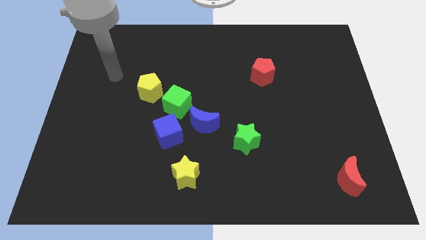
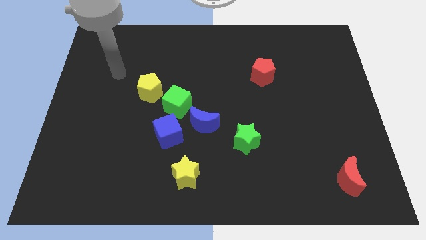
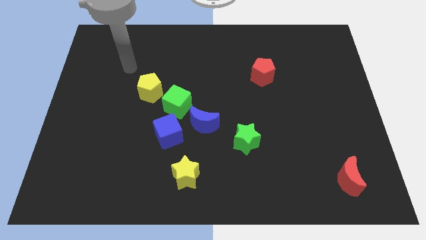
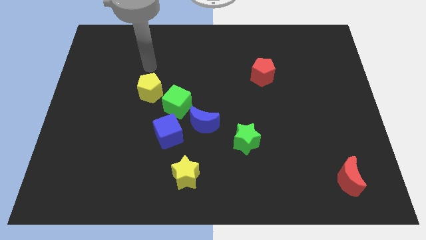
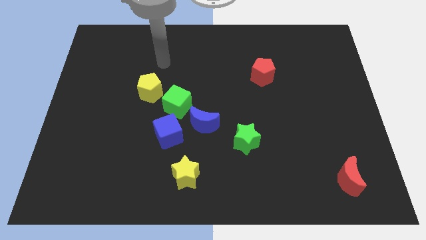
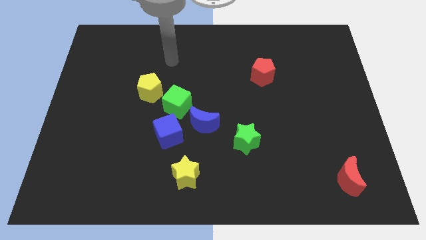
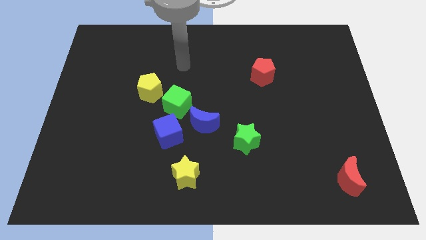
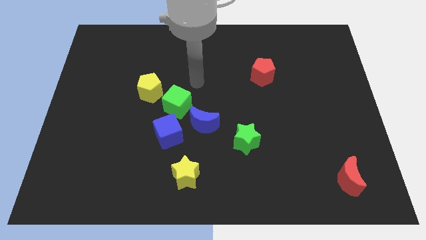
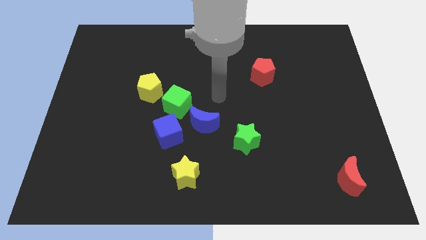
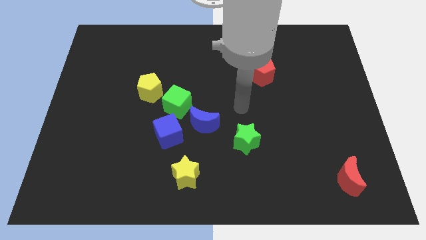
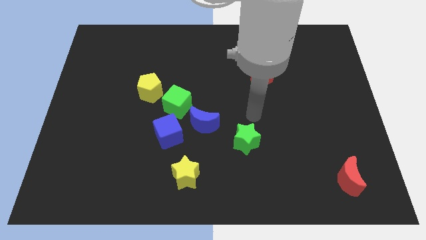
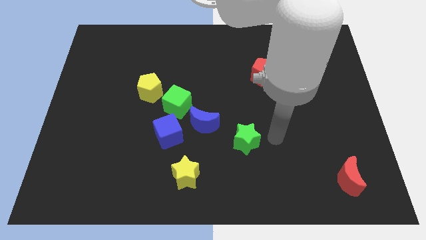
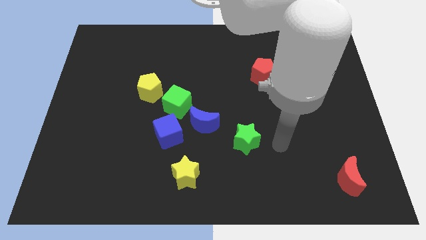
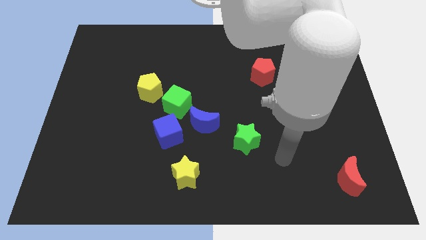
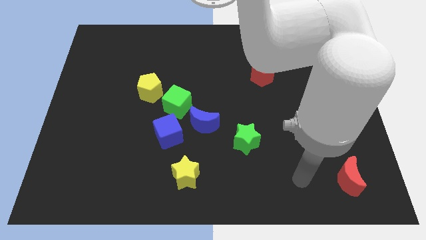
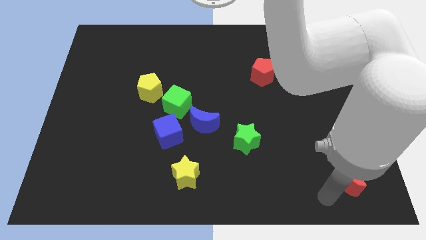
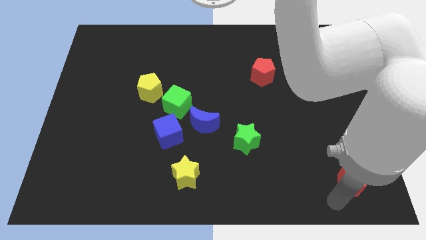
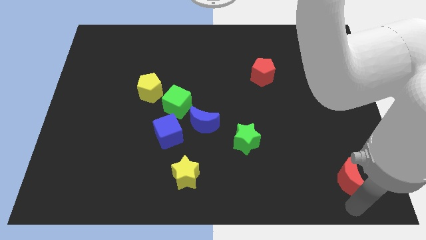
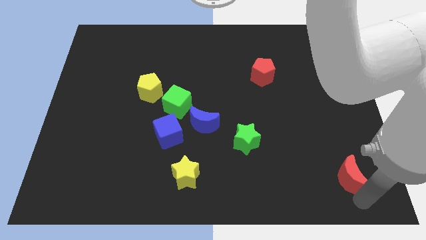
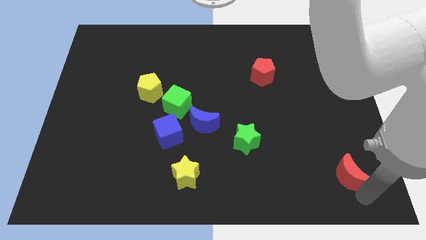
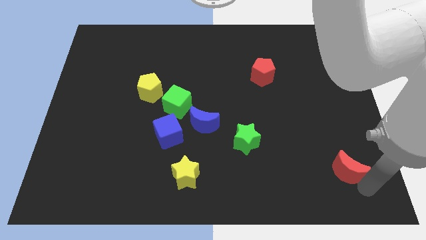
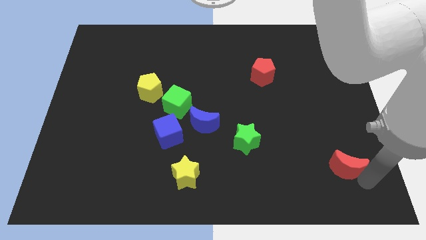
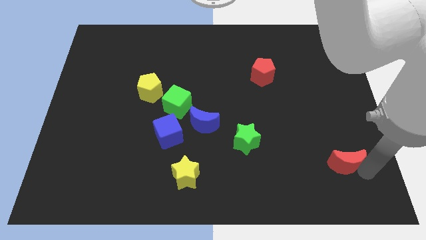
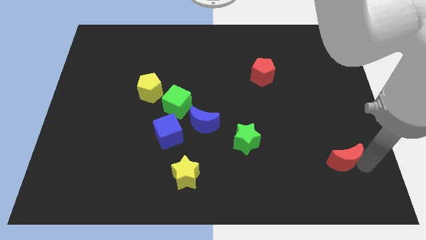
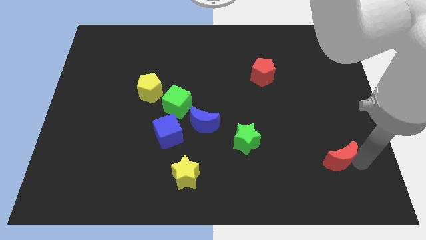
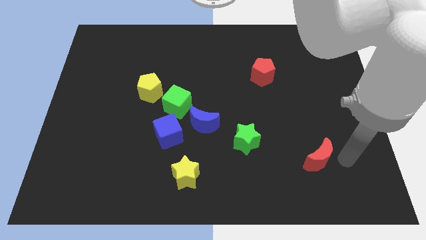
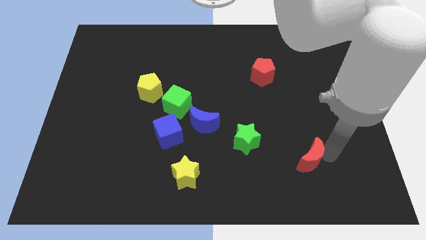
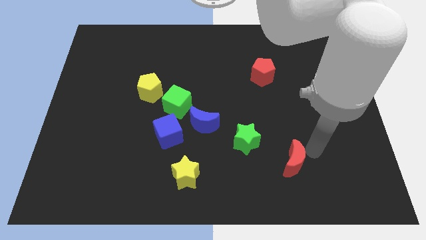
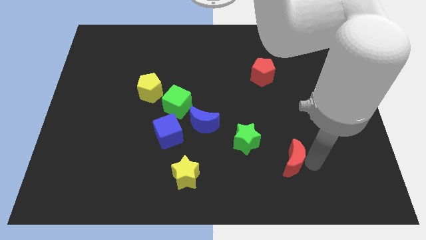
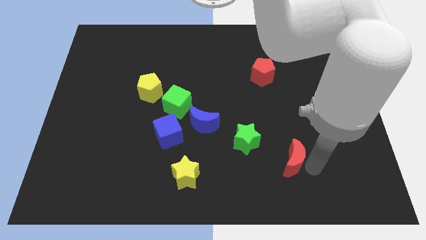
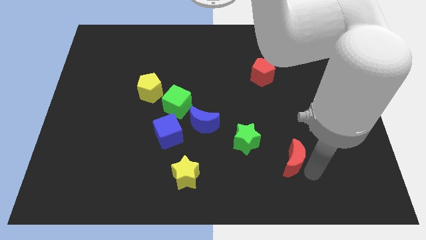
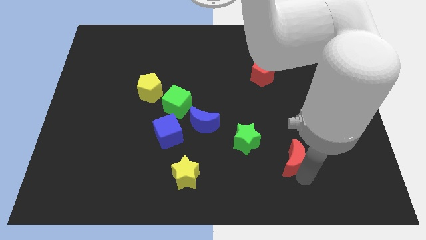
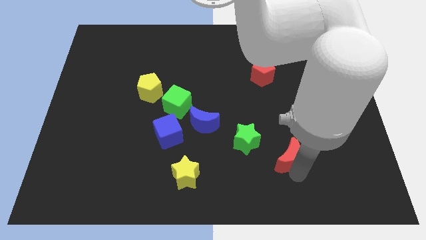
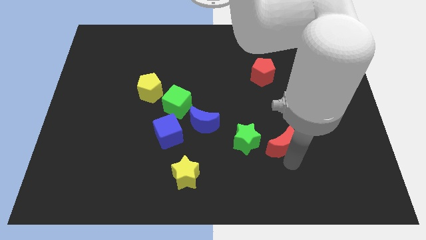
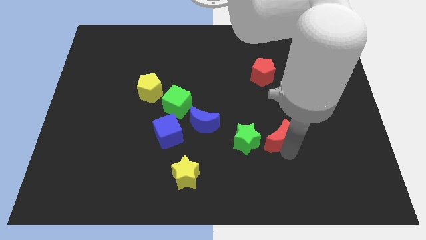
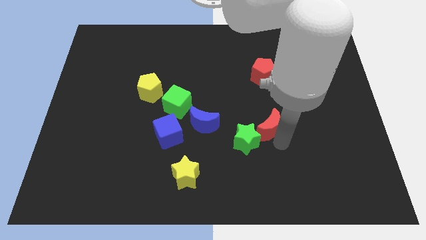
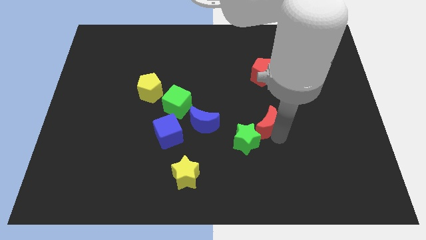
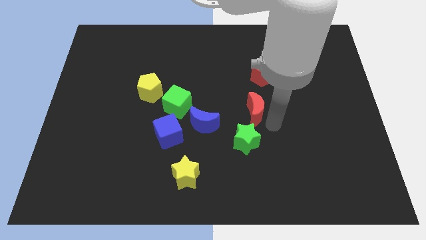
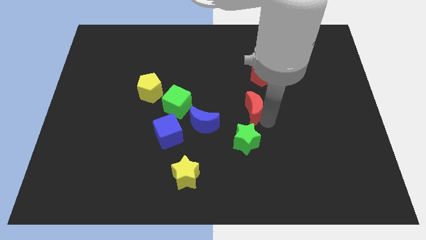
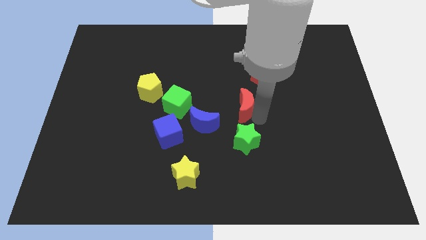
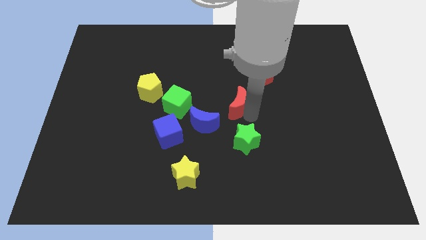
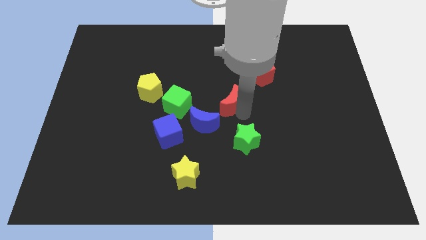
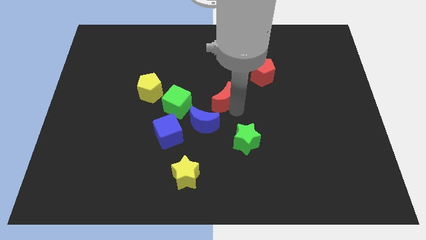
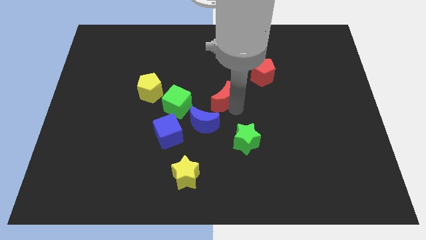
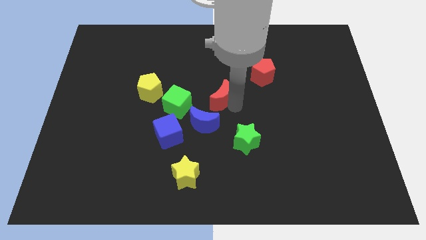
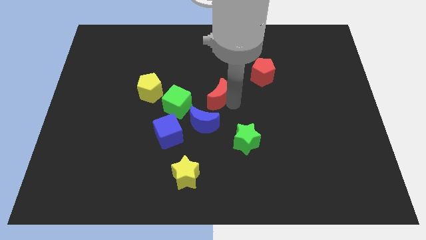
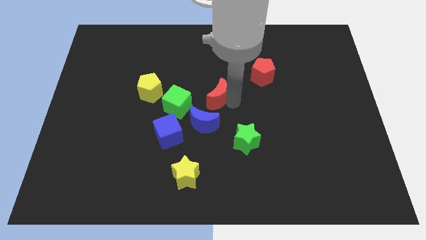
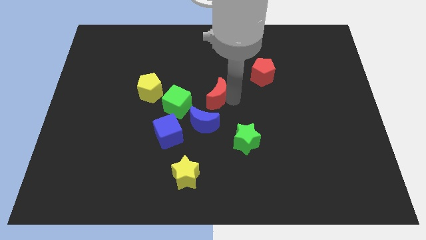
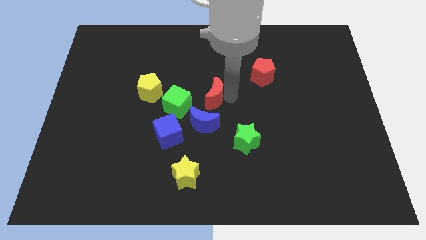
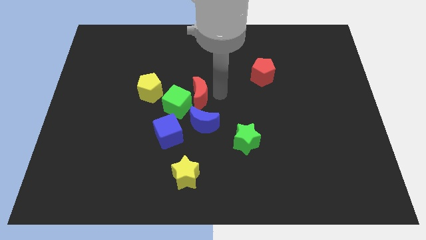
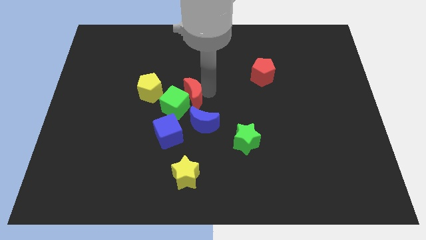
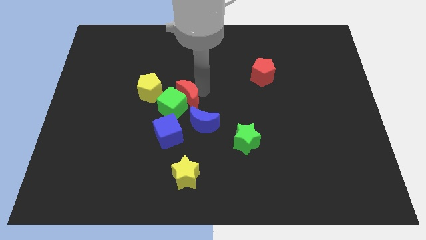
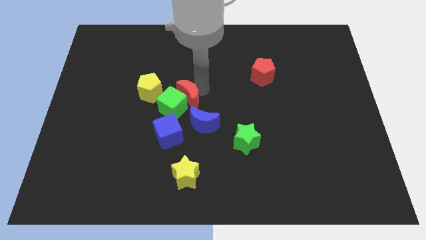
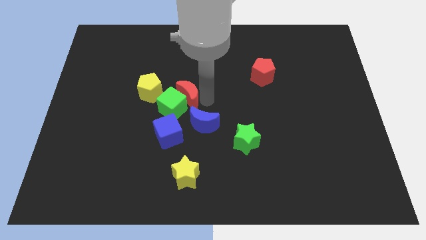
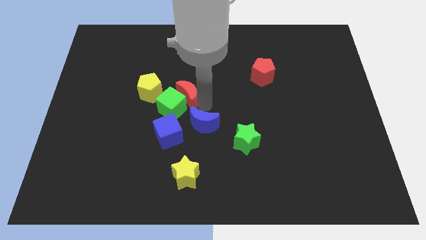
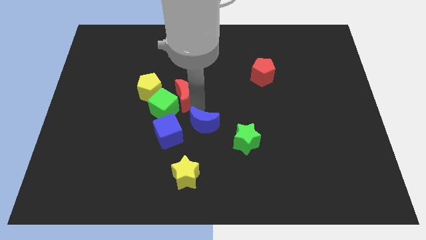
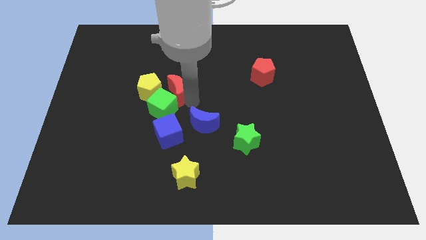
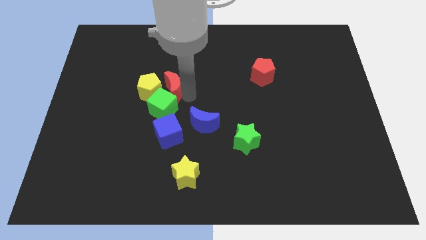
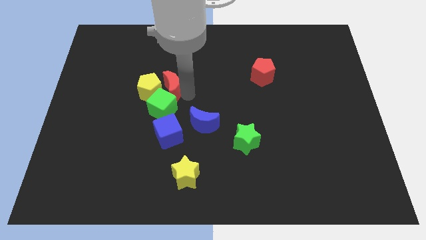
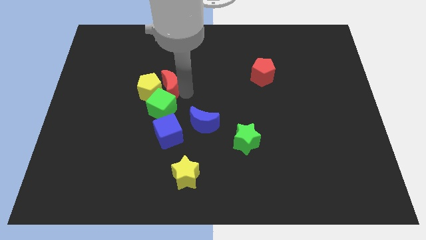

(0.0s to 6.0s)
slide the red moon towards the yellow pentagon

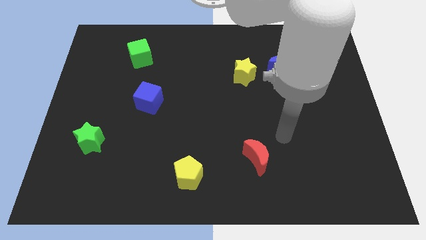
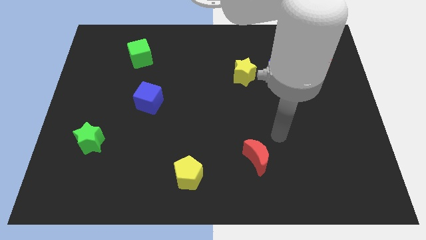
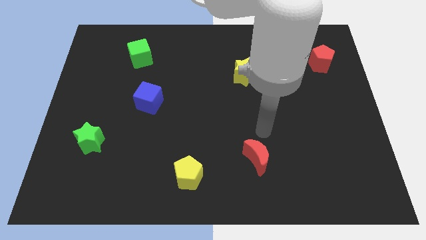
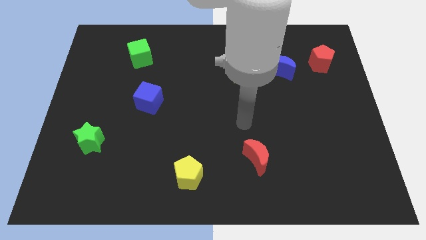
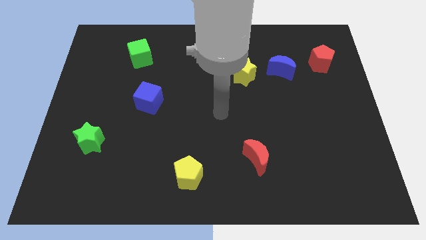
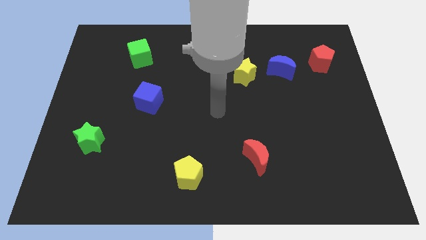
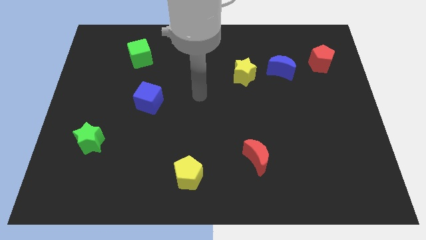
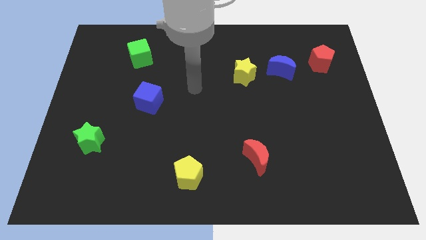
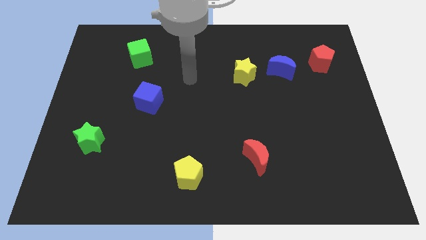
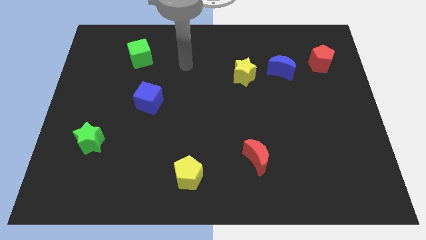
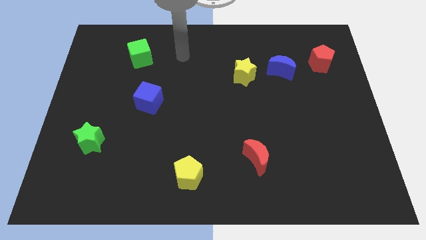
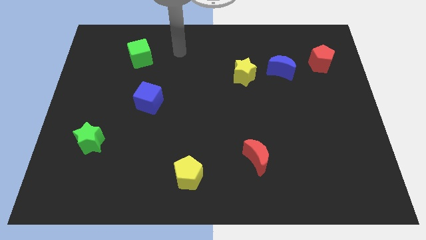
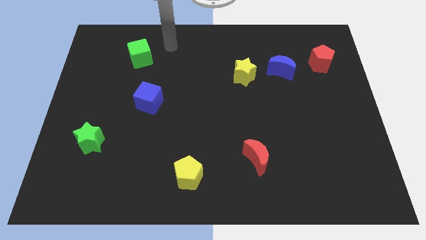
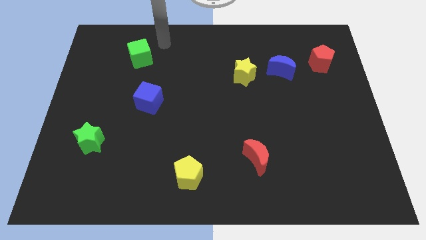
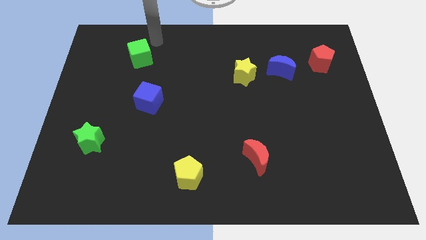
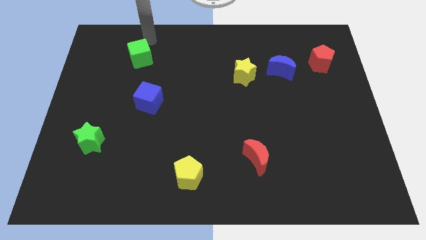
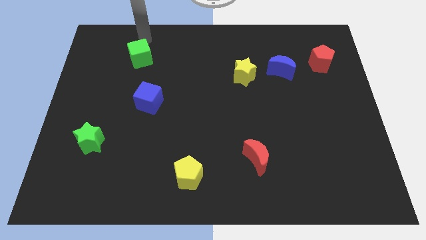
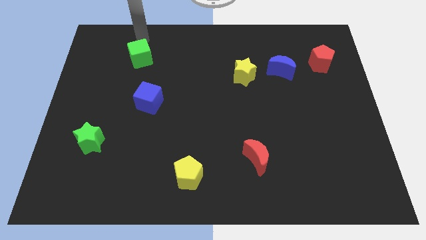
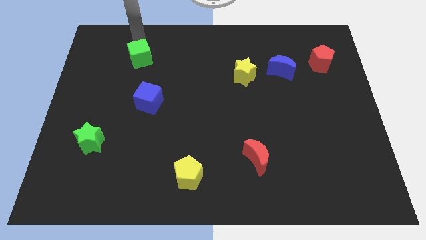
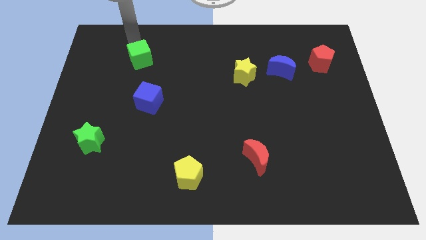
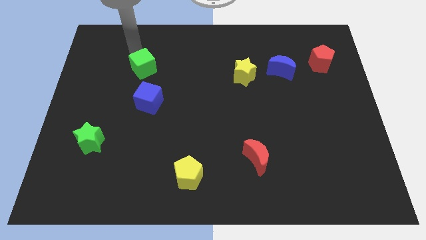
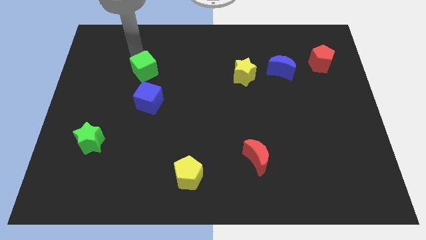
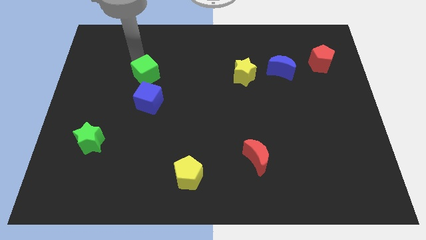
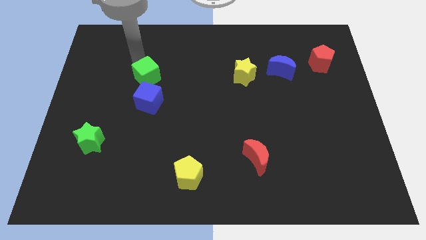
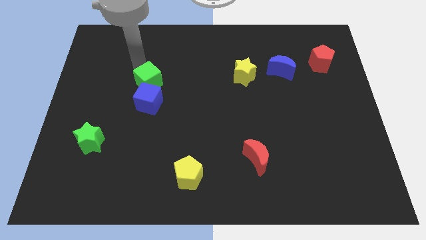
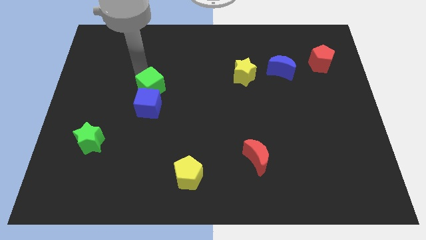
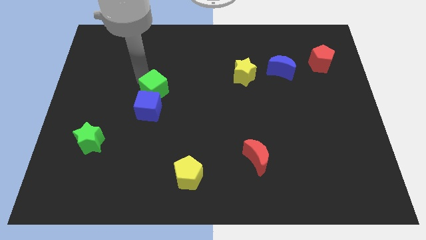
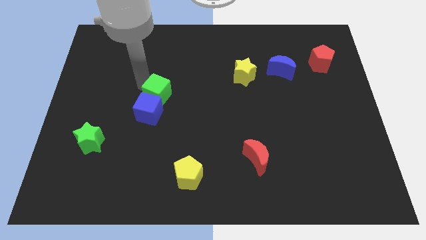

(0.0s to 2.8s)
move the green cube to the blue cube
